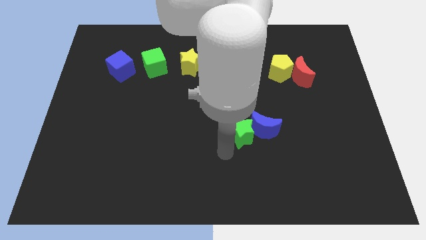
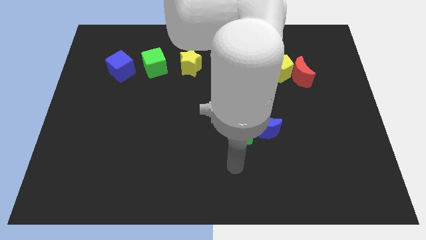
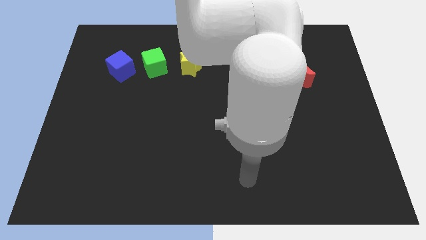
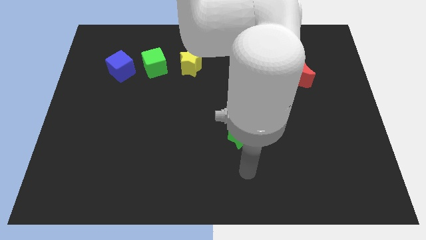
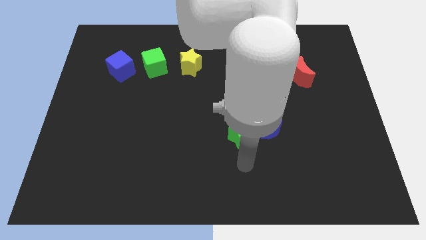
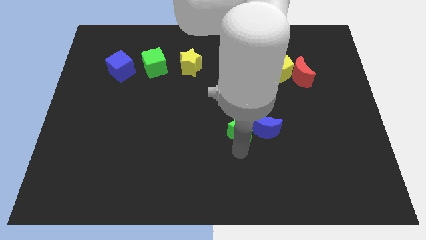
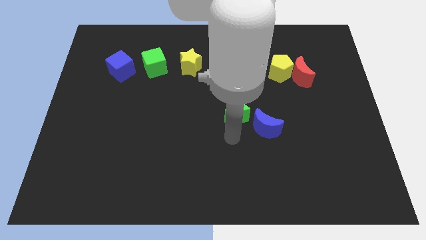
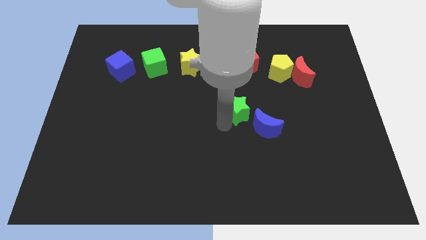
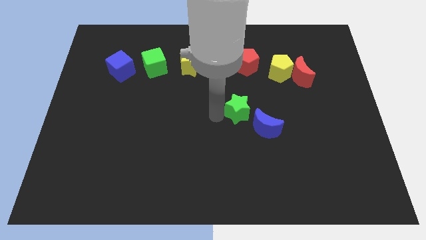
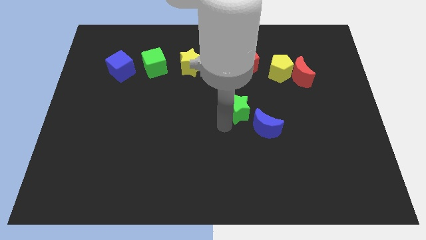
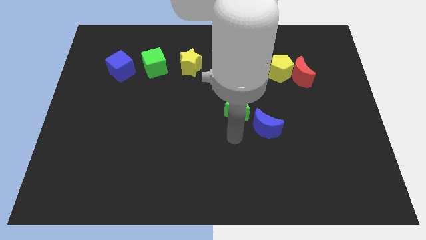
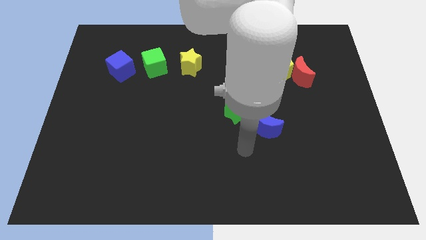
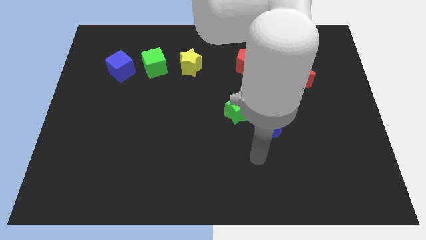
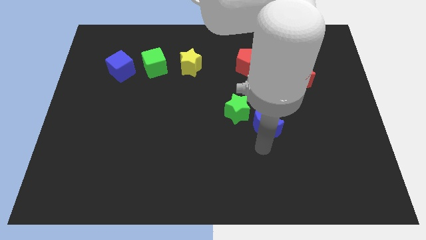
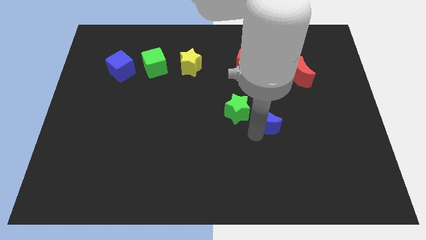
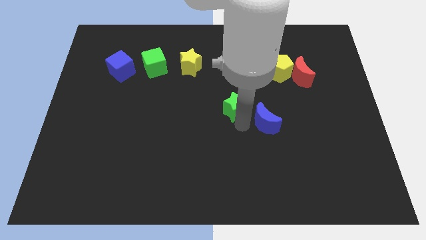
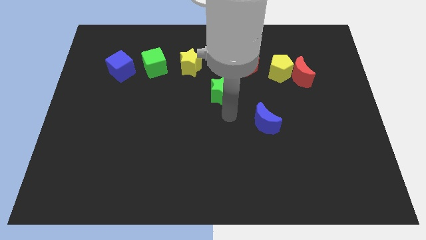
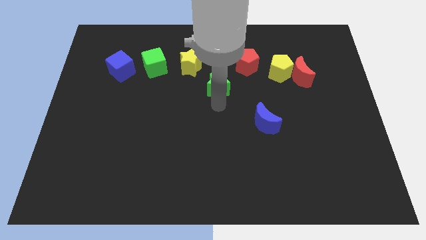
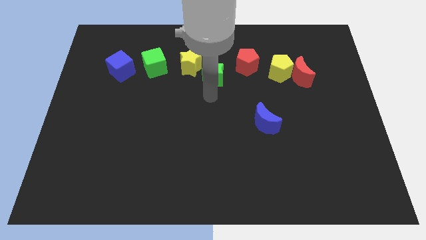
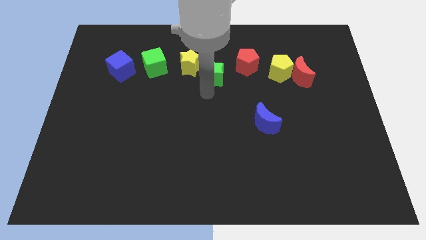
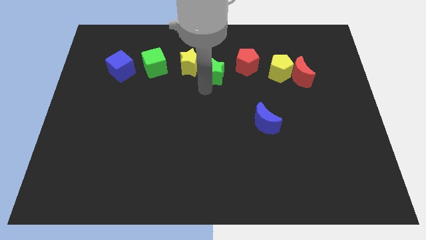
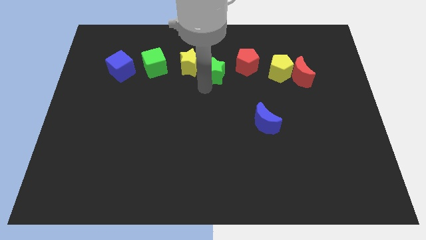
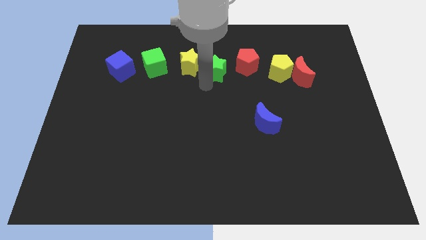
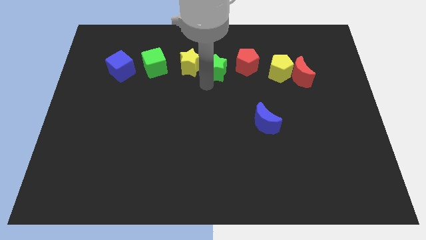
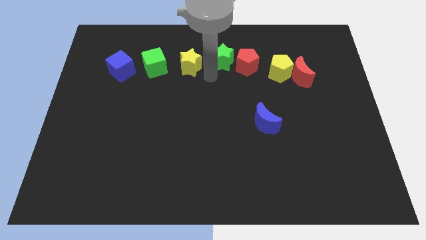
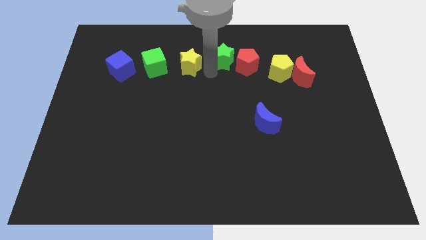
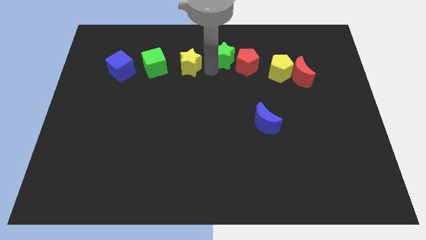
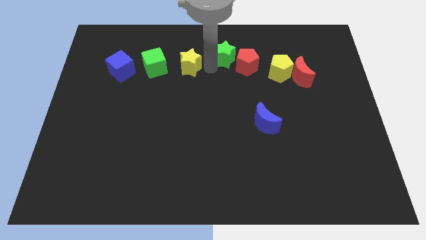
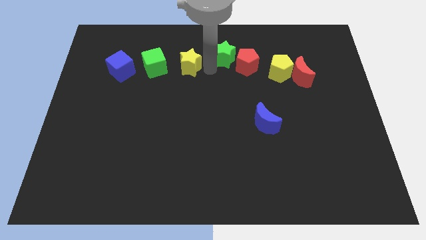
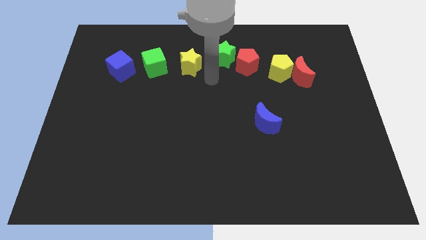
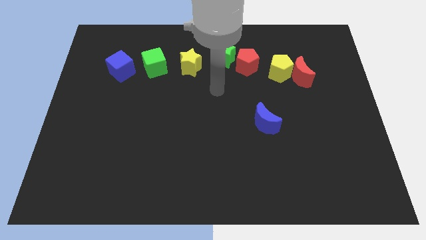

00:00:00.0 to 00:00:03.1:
place the green star in between yellow star and red pentagon

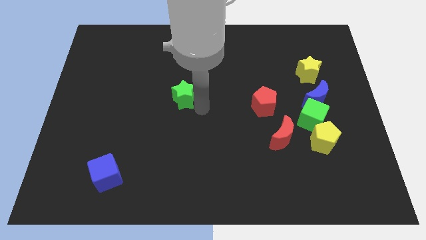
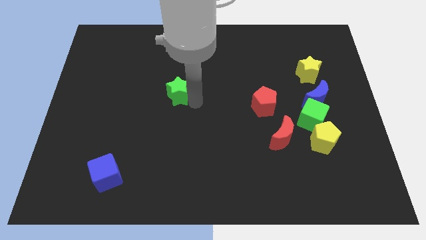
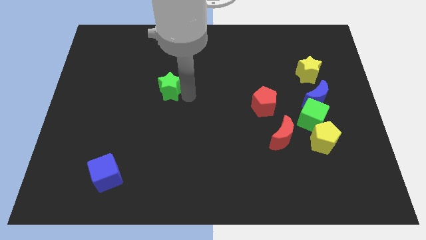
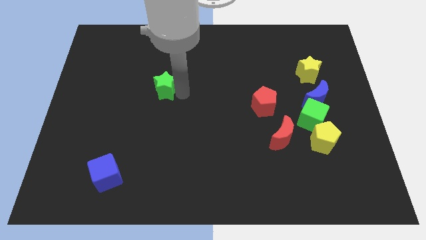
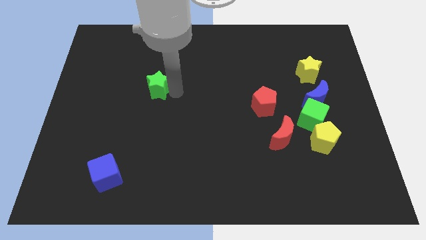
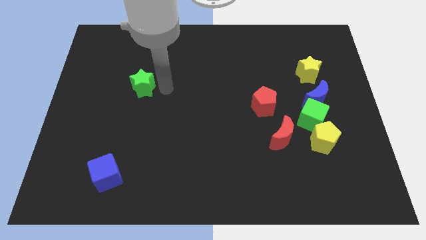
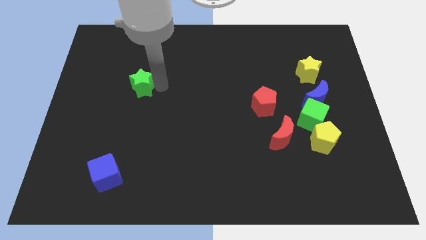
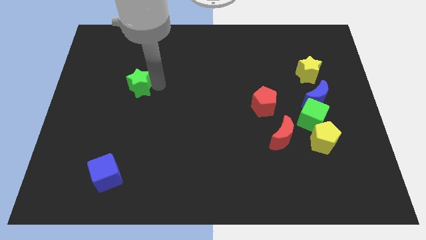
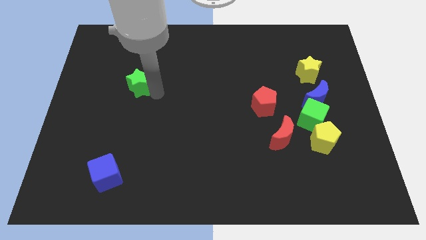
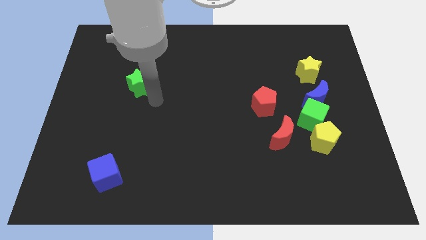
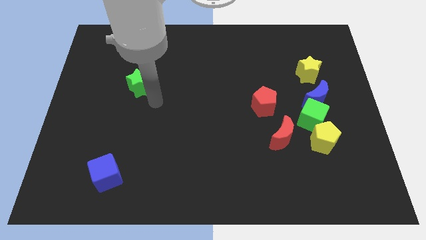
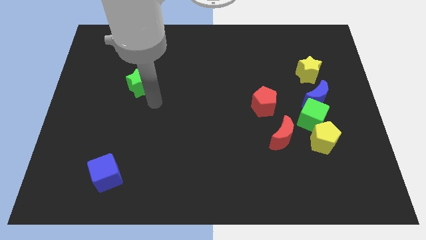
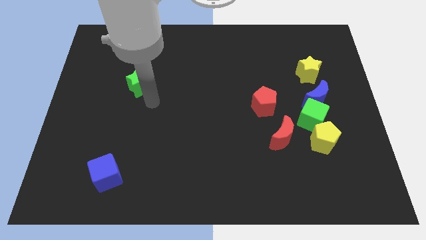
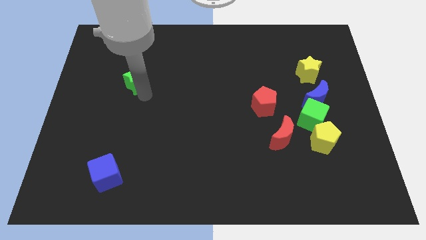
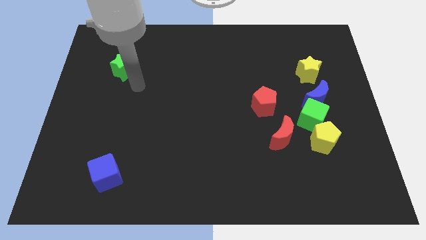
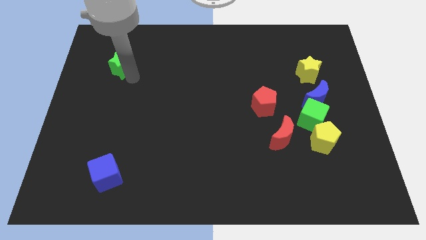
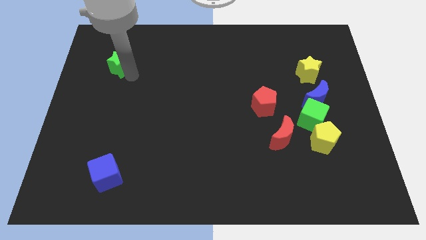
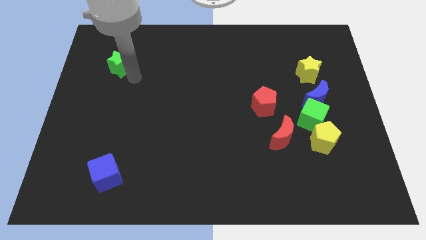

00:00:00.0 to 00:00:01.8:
push green star vertically above blue cube

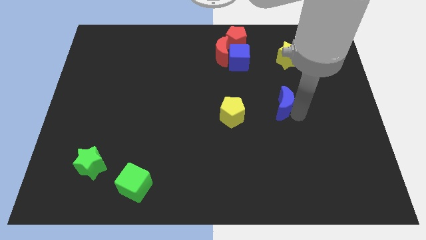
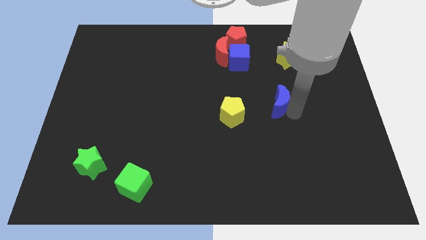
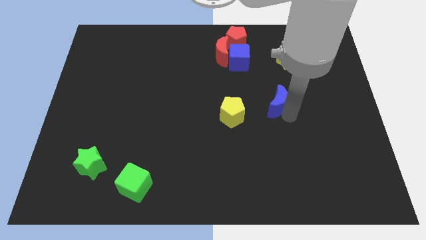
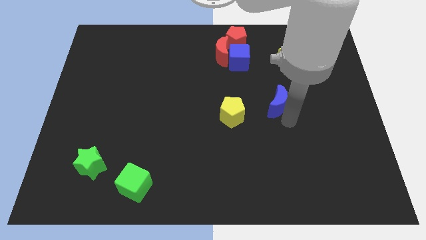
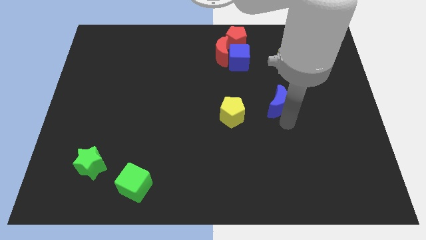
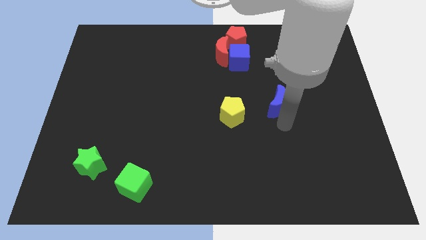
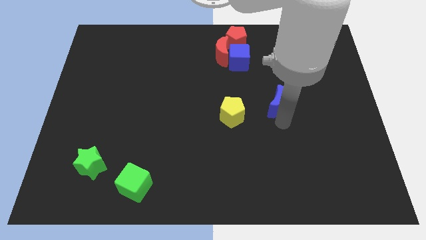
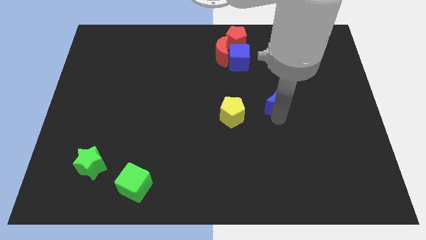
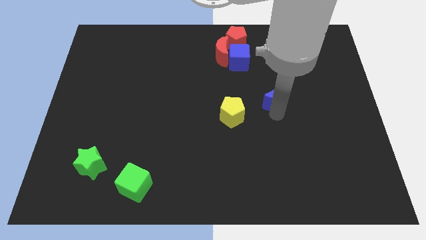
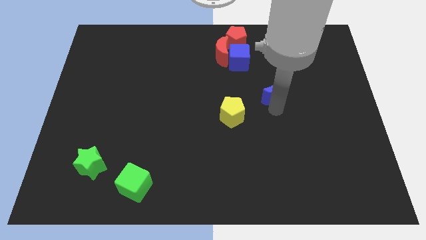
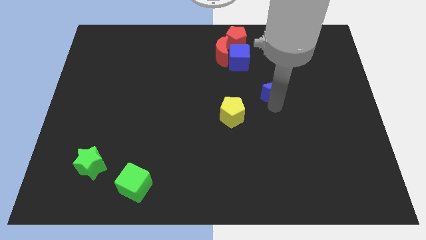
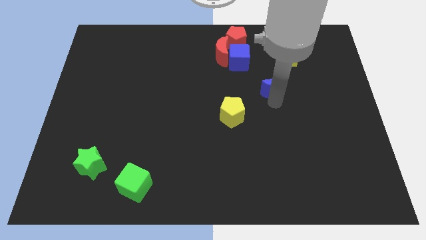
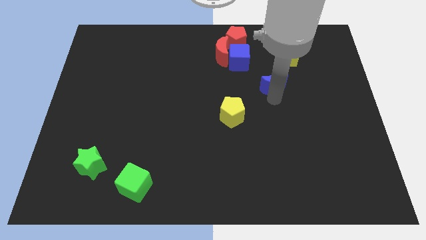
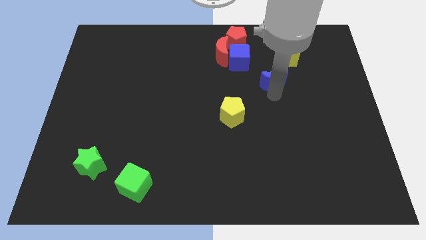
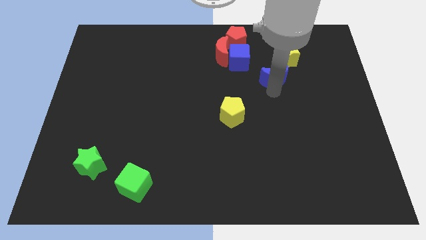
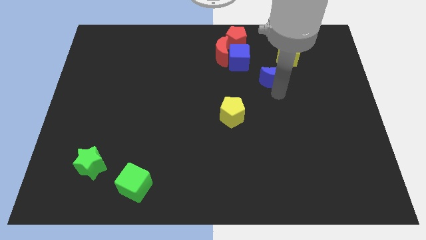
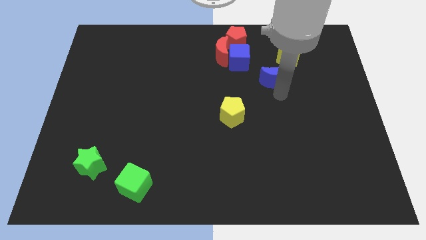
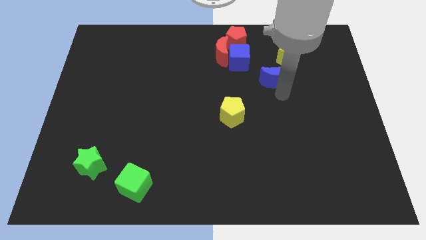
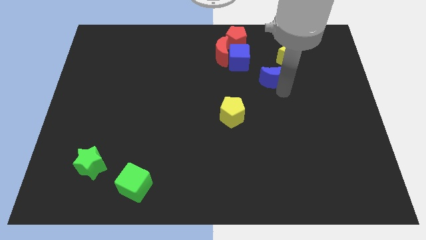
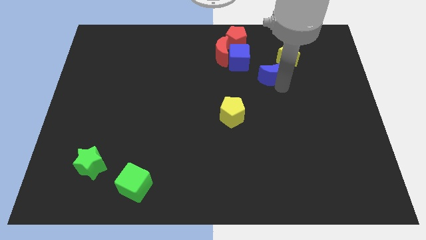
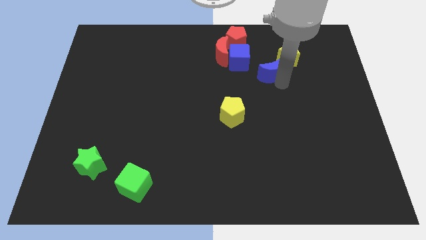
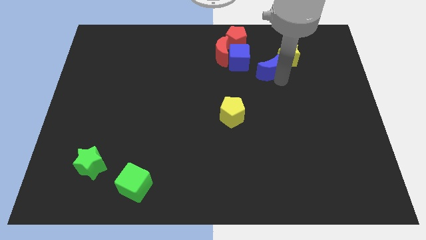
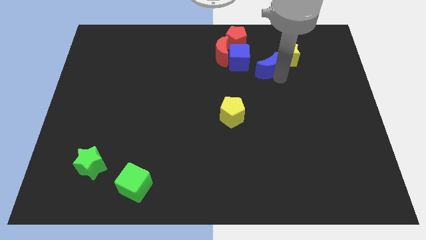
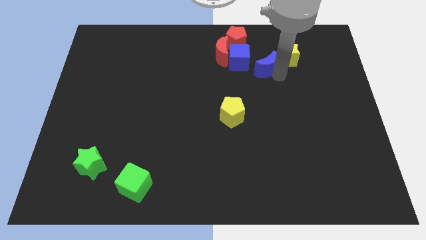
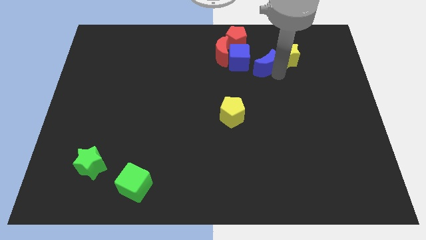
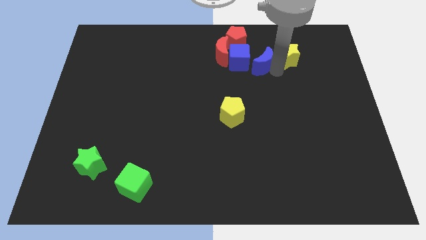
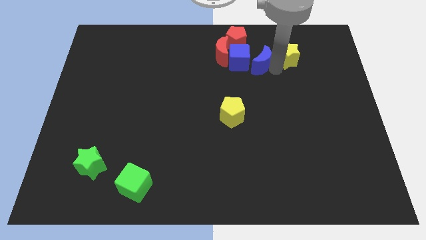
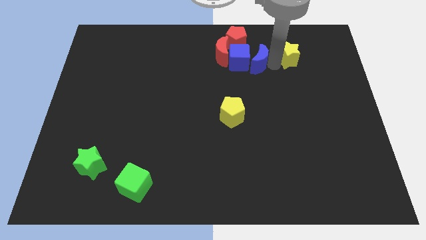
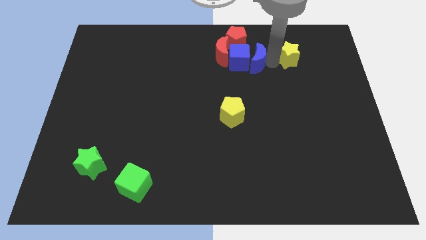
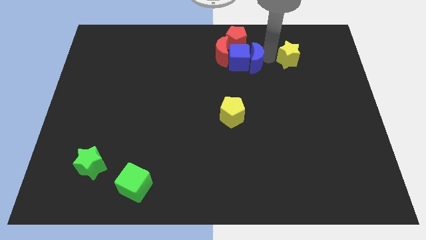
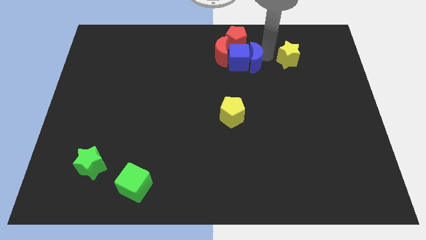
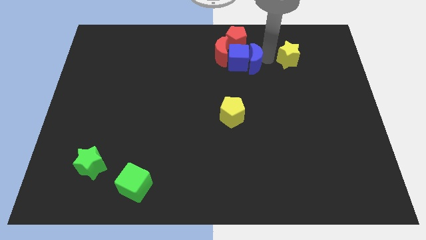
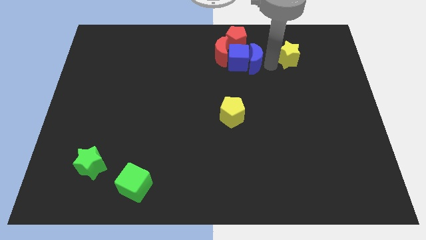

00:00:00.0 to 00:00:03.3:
push blue crescent in to blue cube

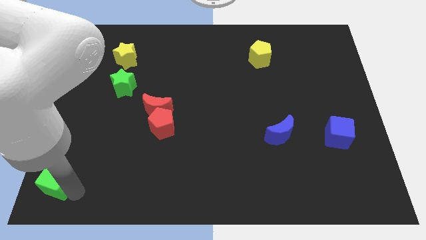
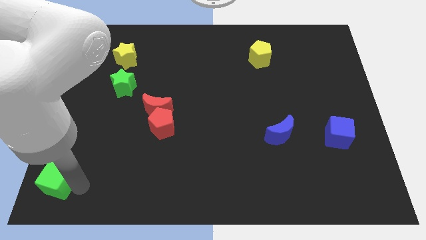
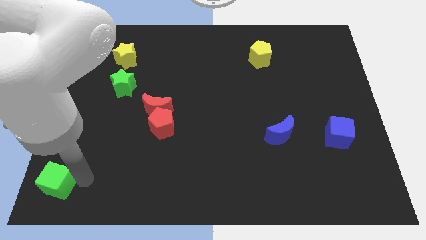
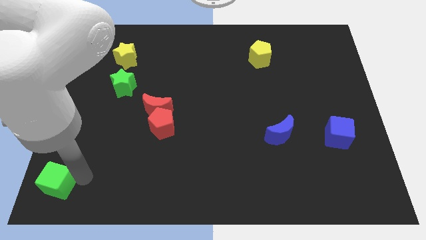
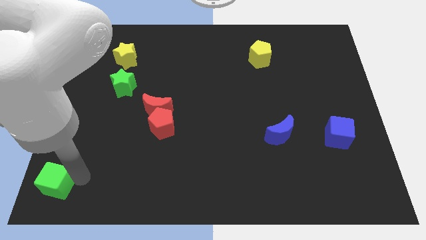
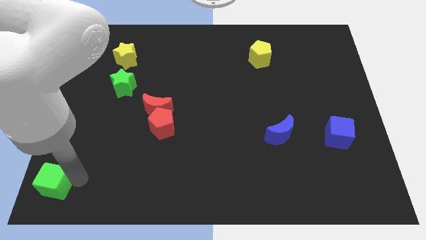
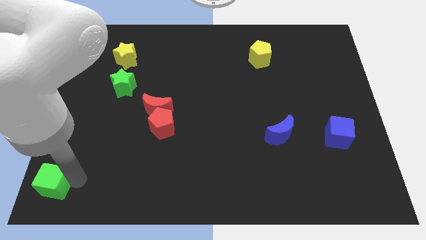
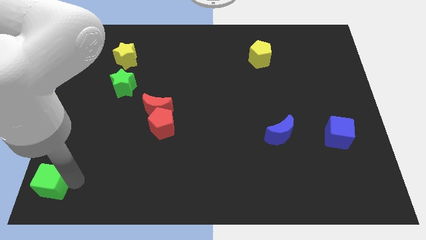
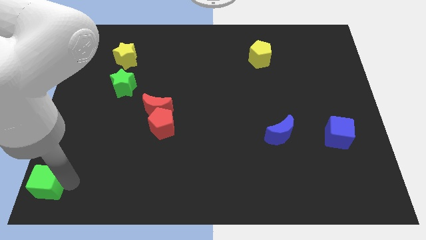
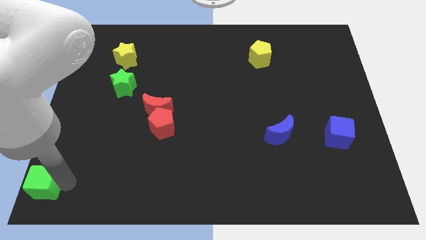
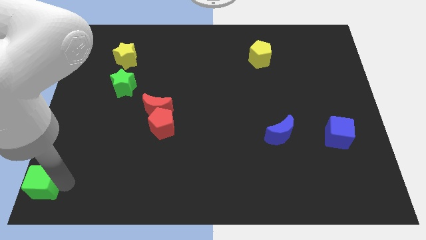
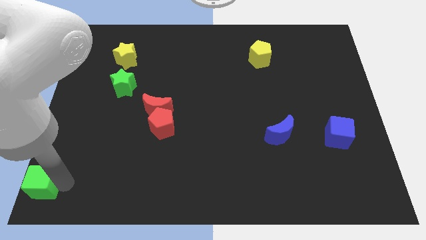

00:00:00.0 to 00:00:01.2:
push green cube to bottom left of the board
